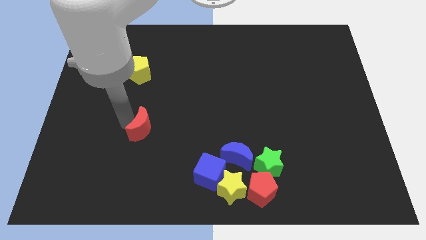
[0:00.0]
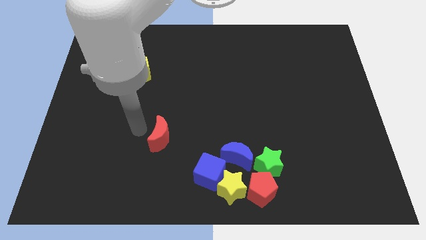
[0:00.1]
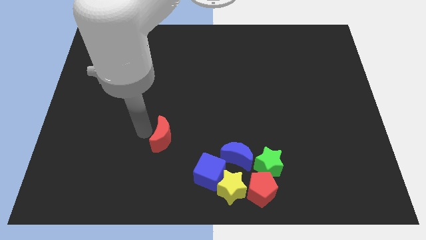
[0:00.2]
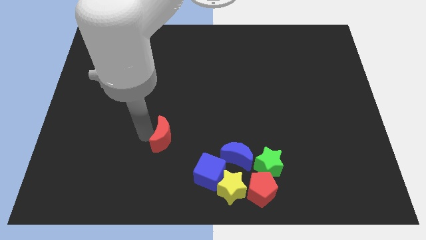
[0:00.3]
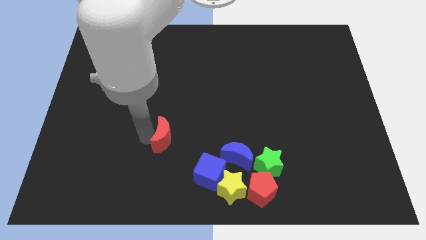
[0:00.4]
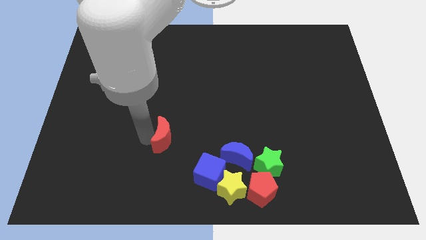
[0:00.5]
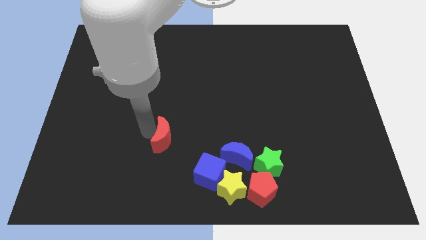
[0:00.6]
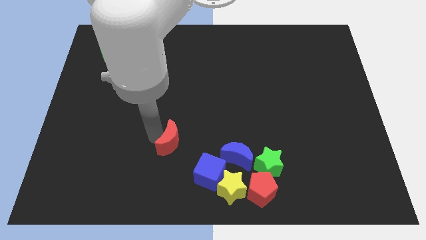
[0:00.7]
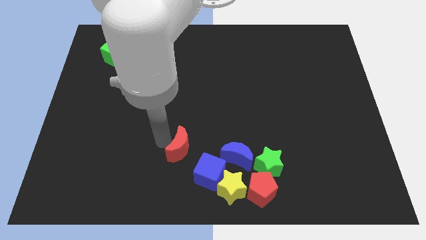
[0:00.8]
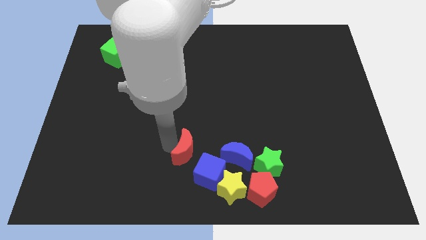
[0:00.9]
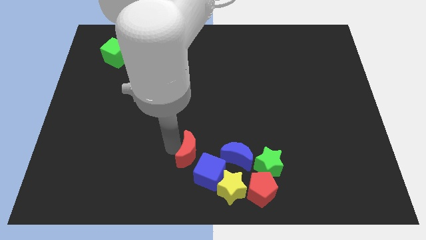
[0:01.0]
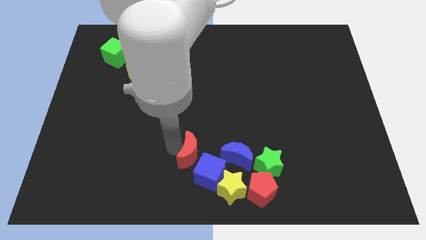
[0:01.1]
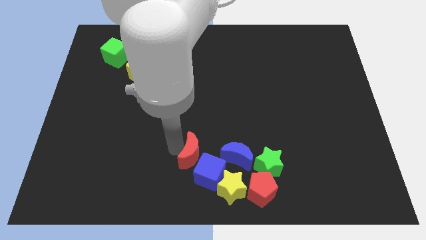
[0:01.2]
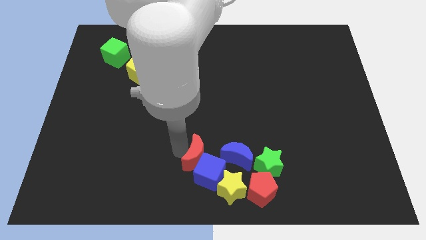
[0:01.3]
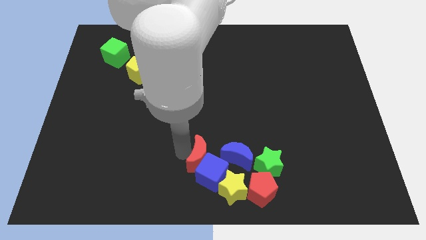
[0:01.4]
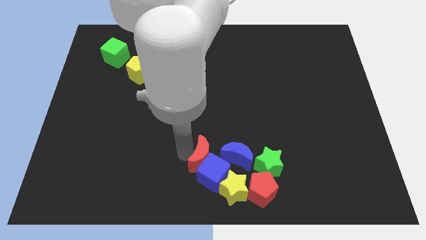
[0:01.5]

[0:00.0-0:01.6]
move the red crescent into the blue cube

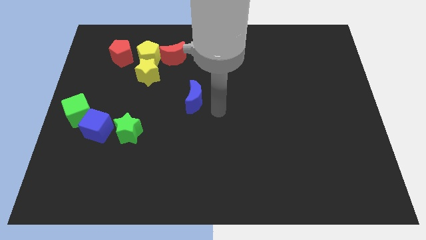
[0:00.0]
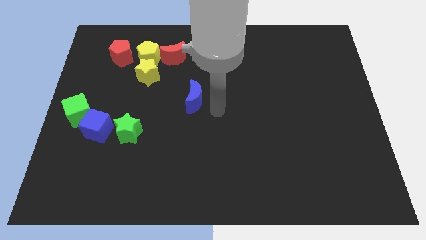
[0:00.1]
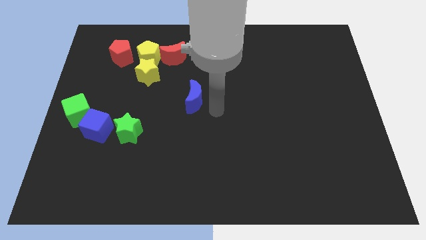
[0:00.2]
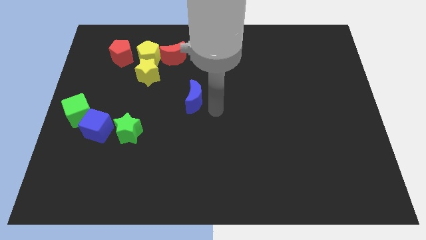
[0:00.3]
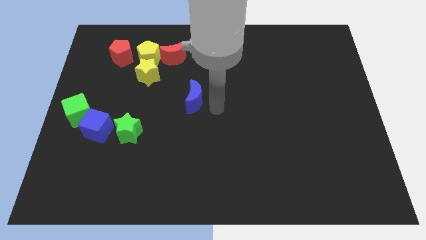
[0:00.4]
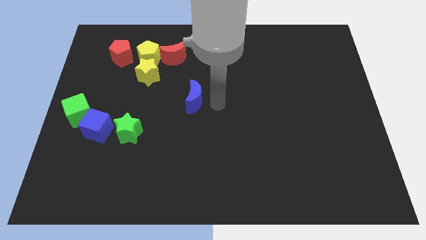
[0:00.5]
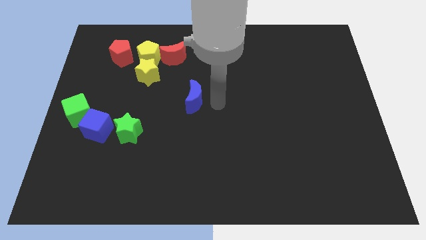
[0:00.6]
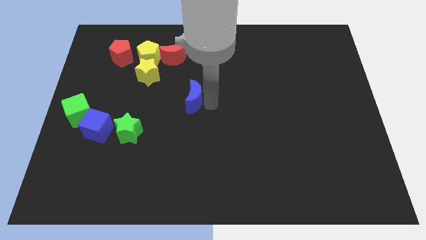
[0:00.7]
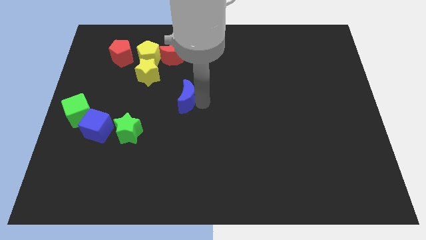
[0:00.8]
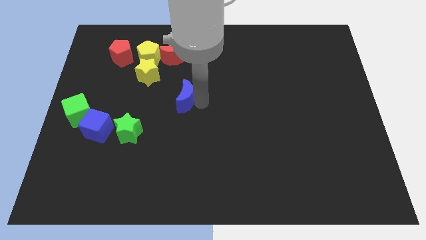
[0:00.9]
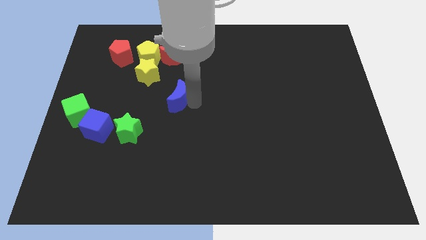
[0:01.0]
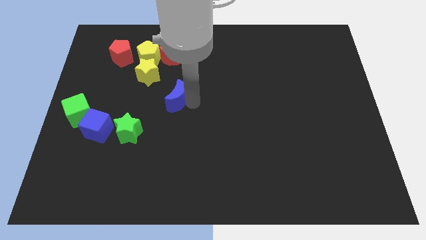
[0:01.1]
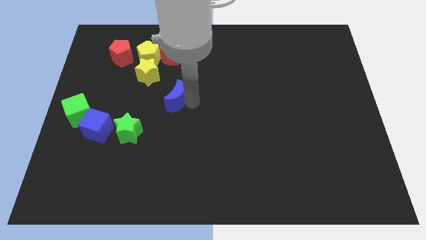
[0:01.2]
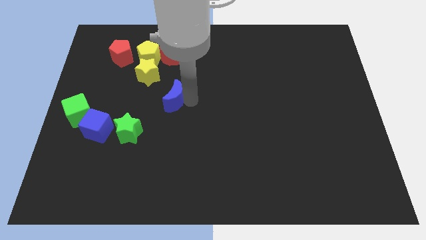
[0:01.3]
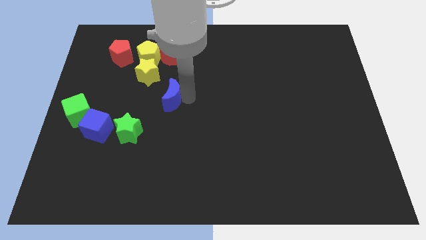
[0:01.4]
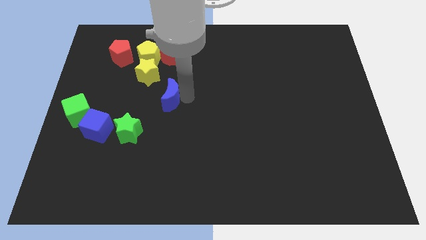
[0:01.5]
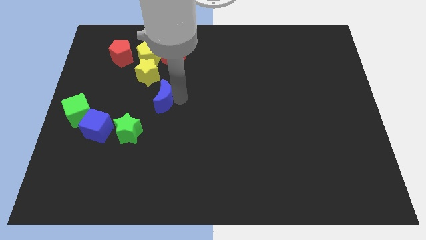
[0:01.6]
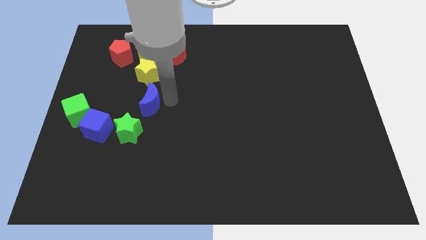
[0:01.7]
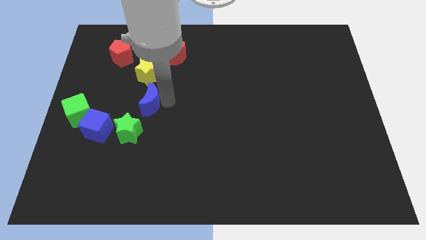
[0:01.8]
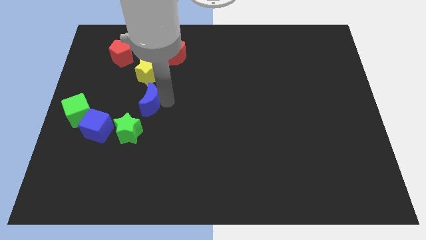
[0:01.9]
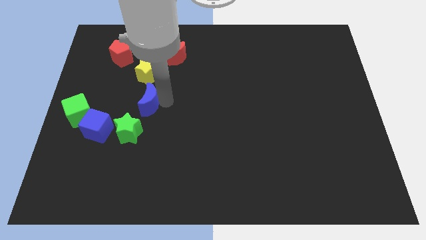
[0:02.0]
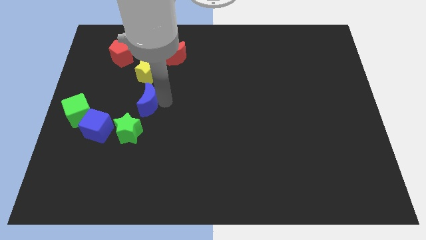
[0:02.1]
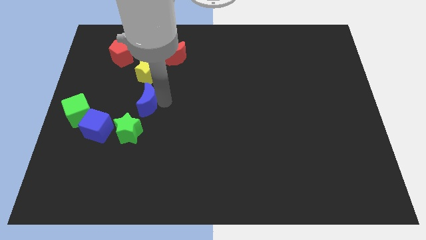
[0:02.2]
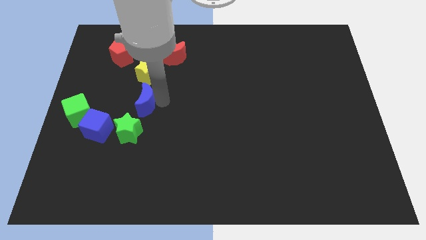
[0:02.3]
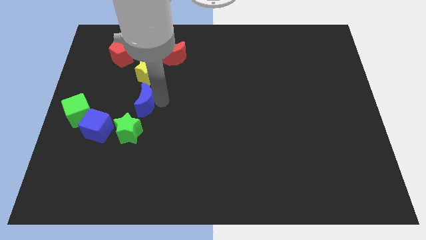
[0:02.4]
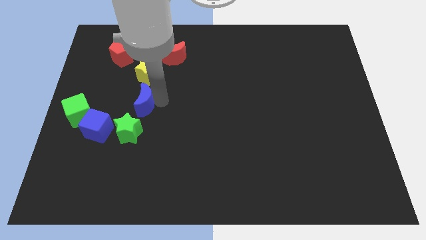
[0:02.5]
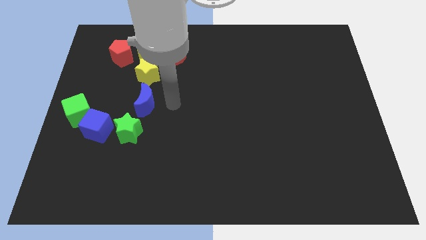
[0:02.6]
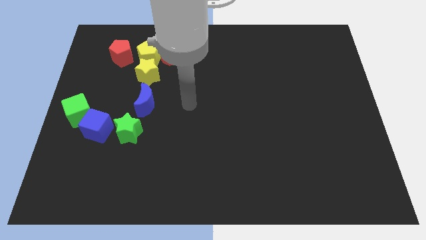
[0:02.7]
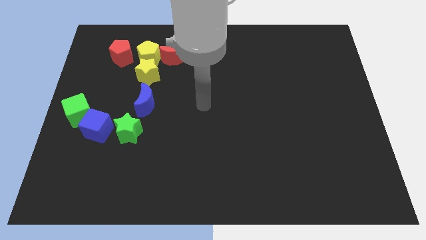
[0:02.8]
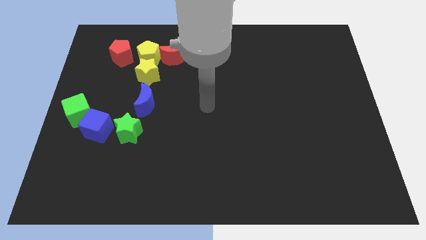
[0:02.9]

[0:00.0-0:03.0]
move the blue moon below to the yellow star

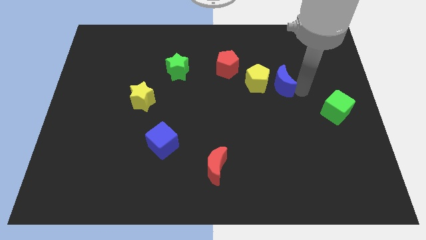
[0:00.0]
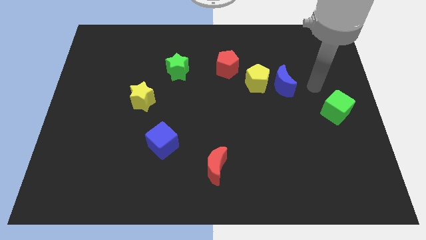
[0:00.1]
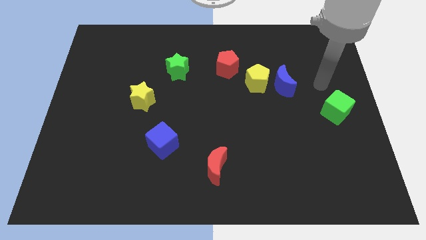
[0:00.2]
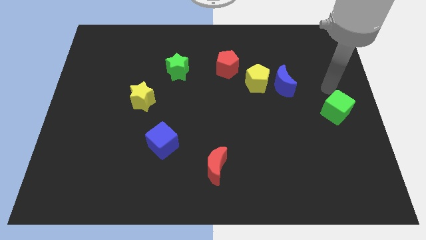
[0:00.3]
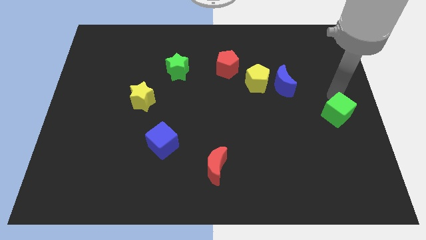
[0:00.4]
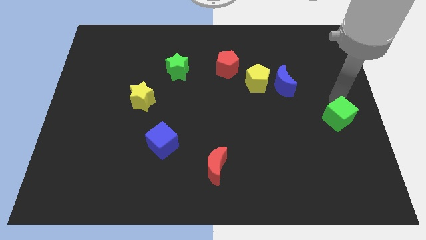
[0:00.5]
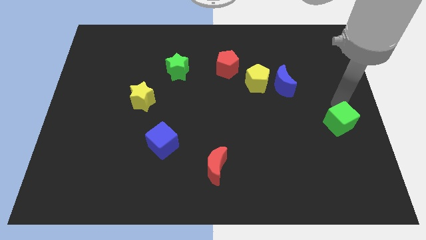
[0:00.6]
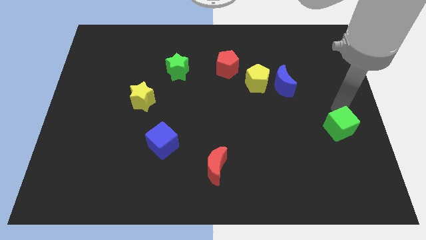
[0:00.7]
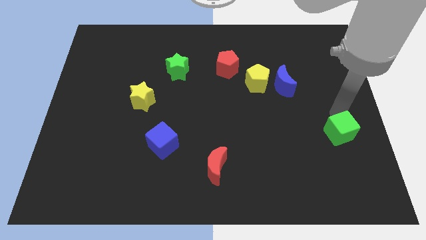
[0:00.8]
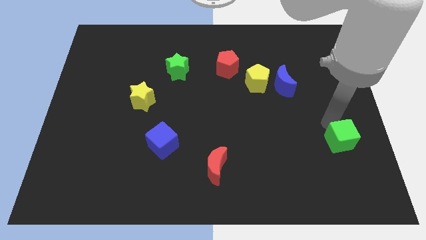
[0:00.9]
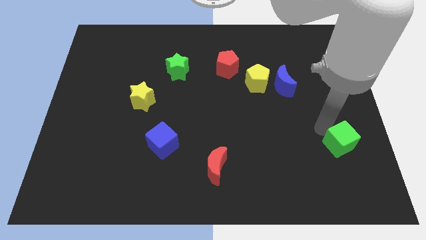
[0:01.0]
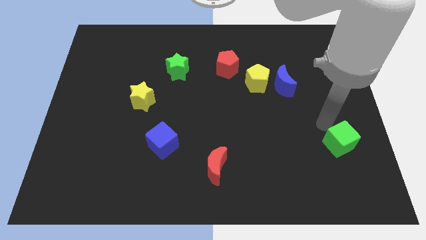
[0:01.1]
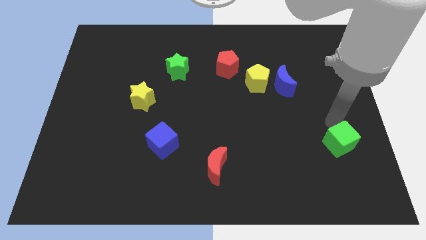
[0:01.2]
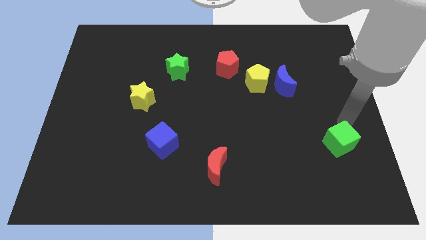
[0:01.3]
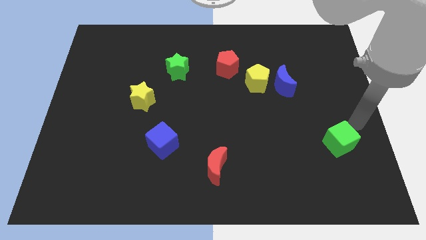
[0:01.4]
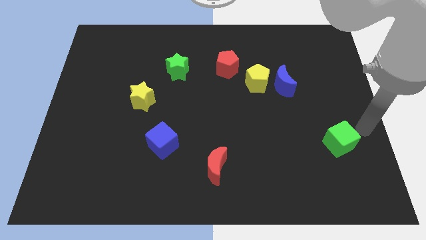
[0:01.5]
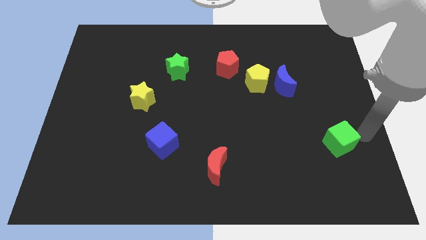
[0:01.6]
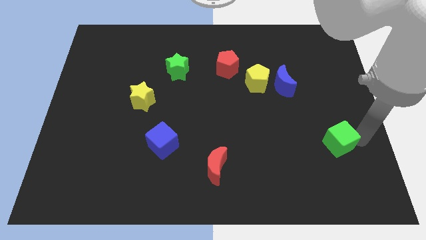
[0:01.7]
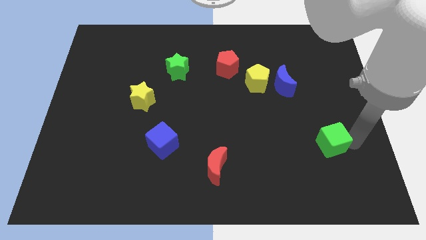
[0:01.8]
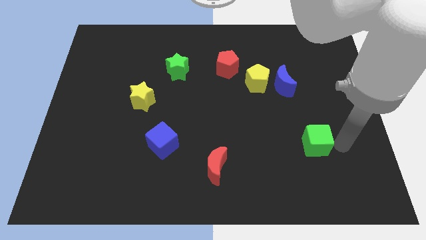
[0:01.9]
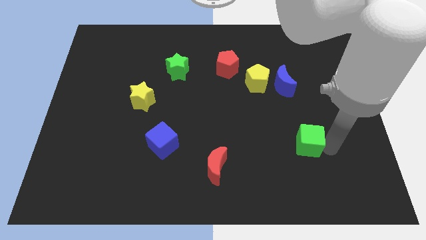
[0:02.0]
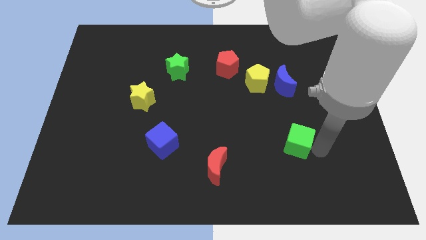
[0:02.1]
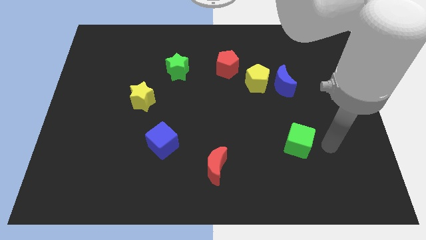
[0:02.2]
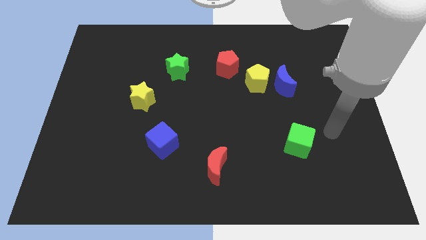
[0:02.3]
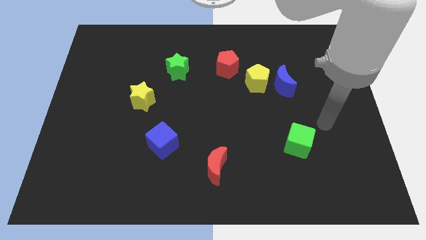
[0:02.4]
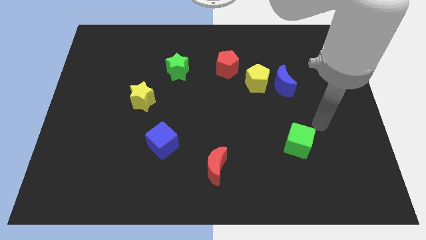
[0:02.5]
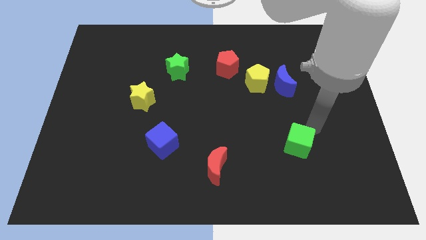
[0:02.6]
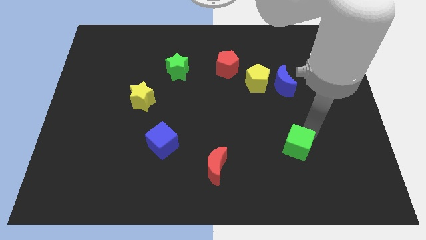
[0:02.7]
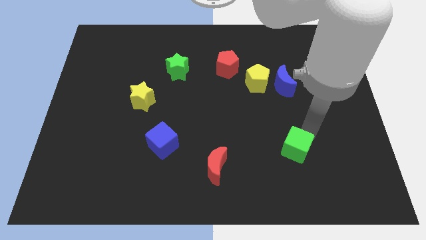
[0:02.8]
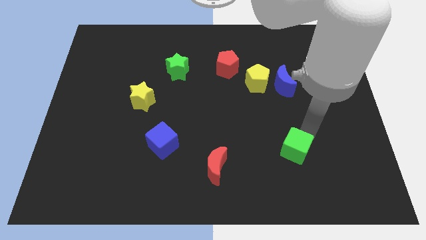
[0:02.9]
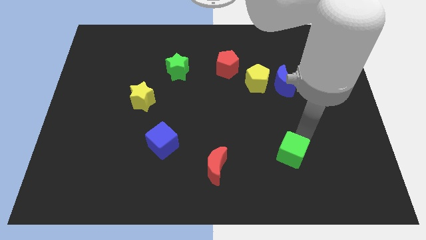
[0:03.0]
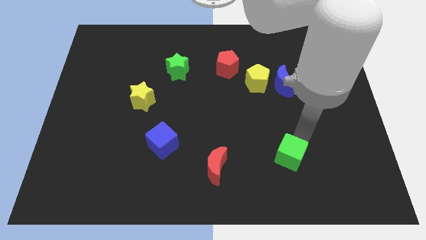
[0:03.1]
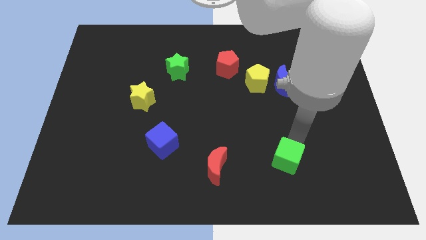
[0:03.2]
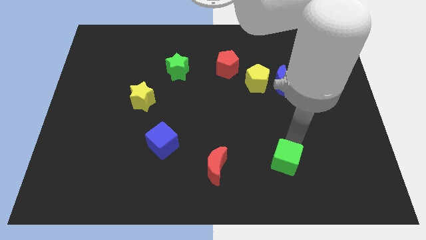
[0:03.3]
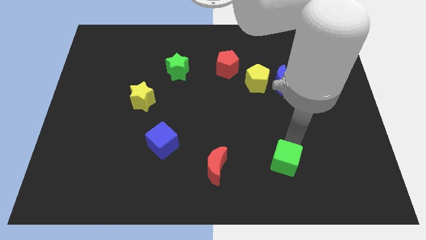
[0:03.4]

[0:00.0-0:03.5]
move the green cube to the right of the red crescent

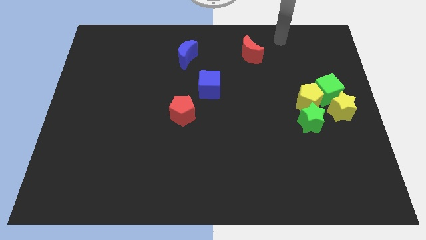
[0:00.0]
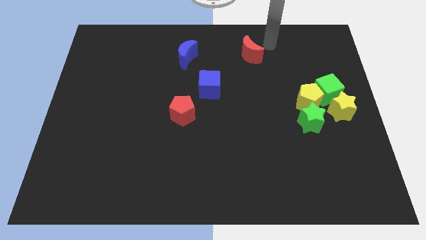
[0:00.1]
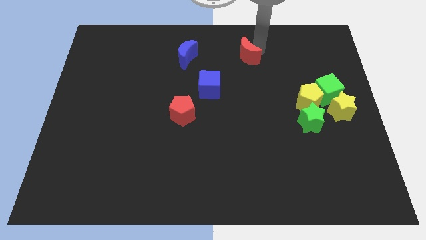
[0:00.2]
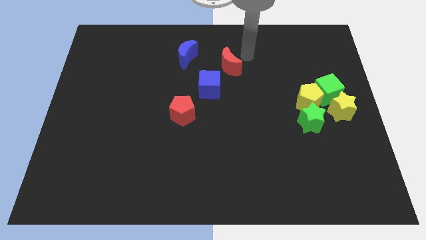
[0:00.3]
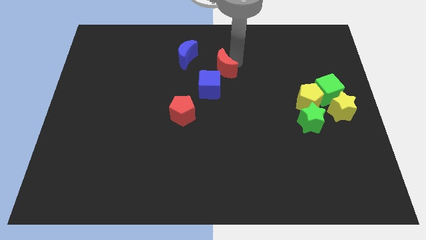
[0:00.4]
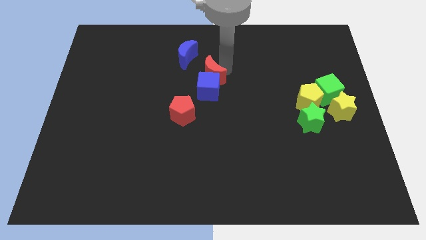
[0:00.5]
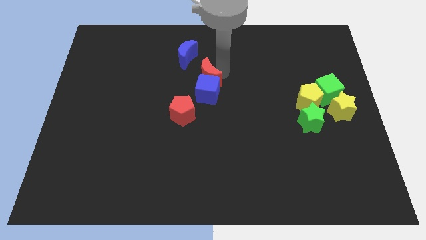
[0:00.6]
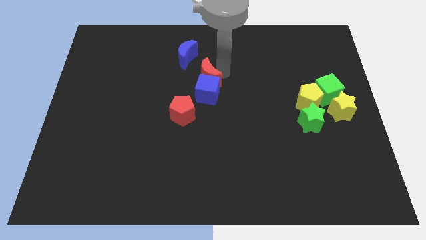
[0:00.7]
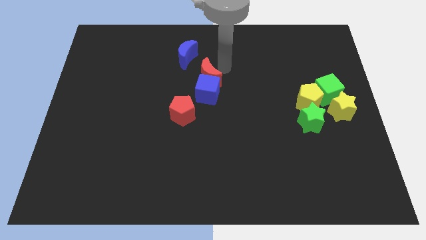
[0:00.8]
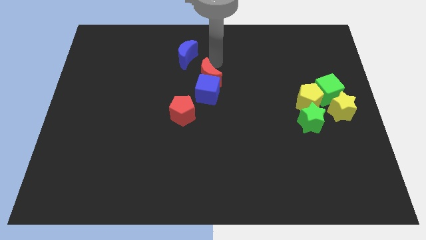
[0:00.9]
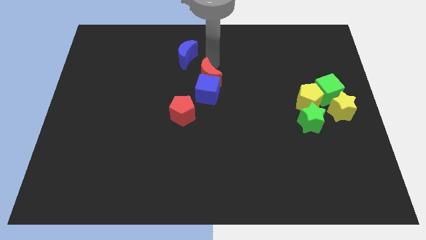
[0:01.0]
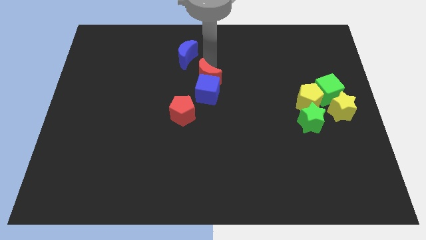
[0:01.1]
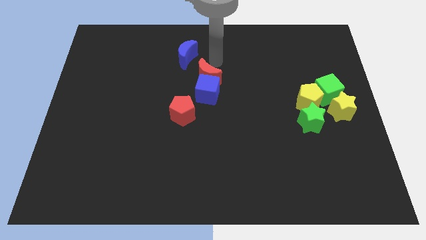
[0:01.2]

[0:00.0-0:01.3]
push the red moon into the blue cube
